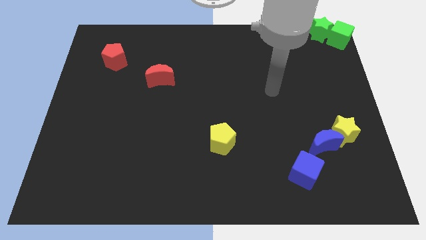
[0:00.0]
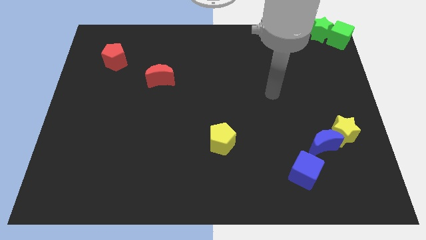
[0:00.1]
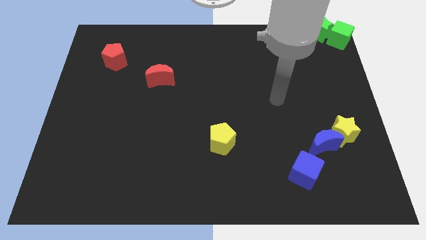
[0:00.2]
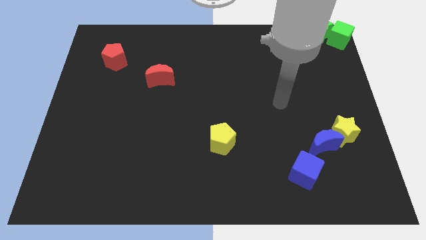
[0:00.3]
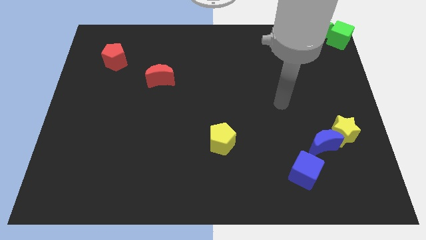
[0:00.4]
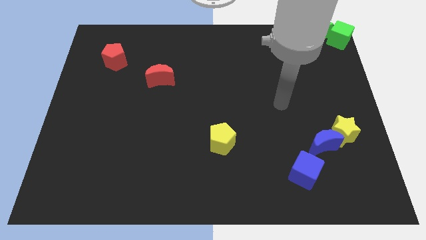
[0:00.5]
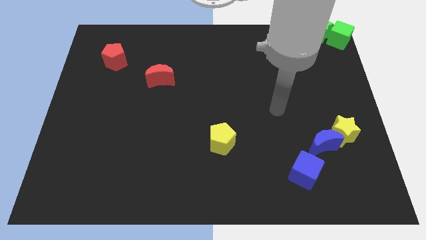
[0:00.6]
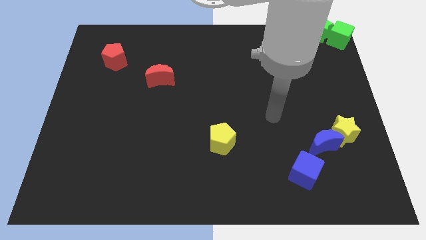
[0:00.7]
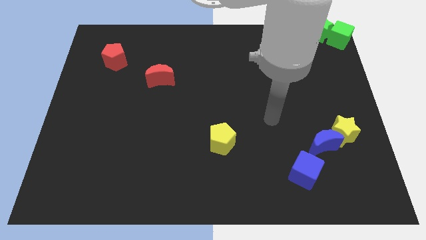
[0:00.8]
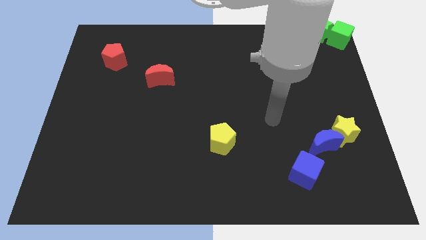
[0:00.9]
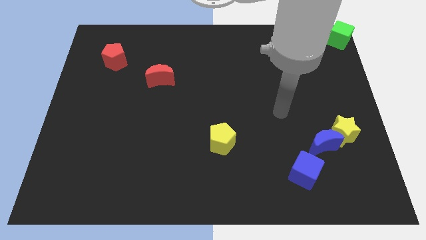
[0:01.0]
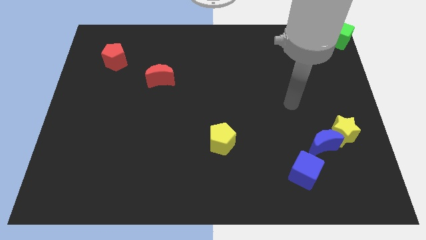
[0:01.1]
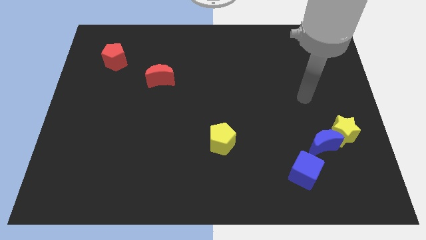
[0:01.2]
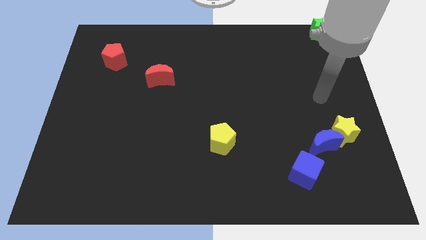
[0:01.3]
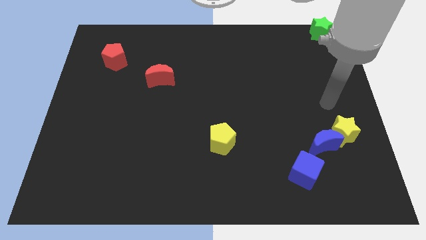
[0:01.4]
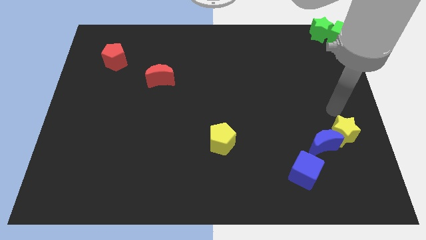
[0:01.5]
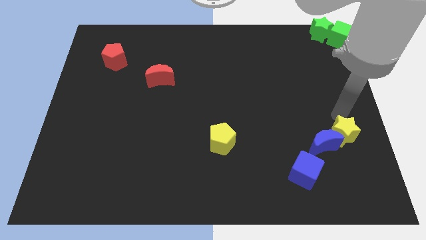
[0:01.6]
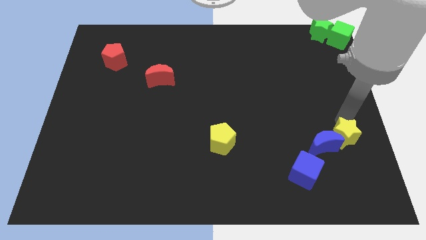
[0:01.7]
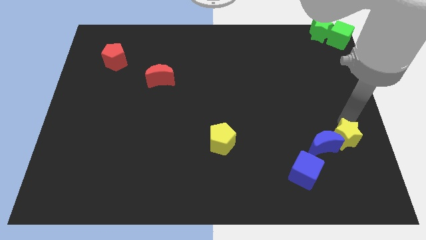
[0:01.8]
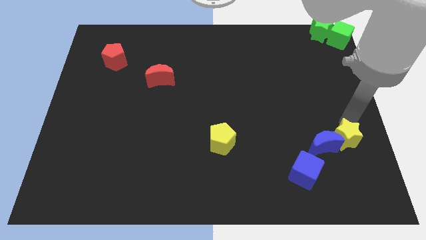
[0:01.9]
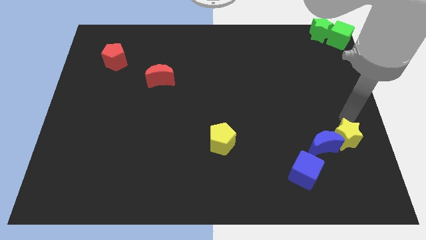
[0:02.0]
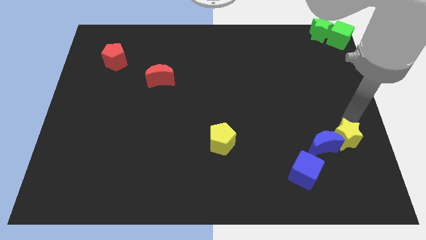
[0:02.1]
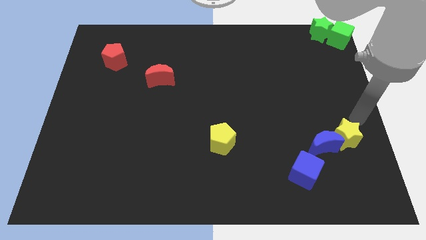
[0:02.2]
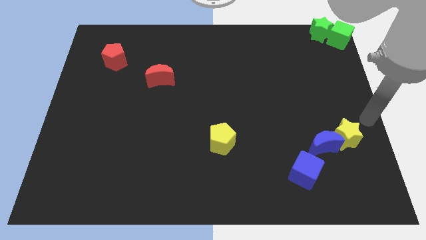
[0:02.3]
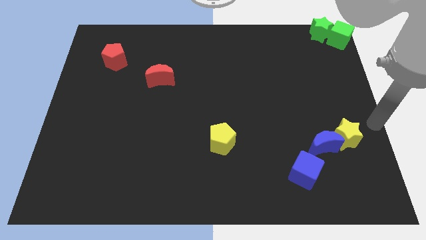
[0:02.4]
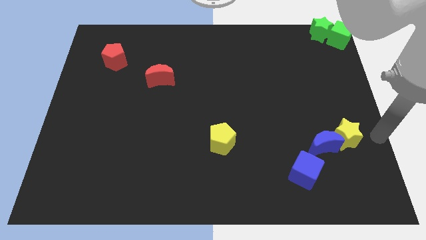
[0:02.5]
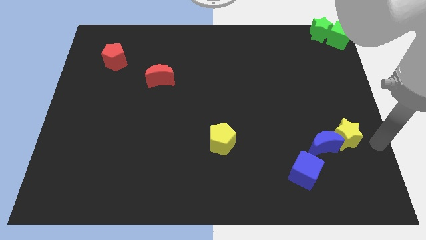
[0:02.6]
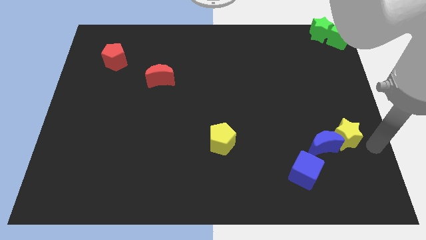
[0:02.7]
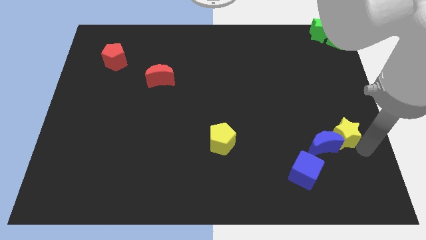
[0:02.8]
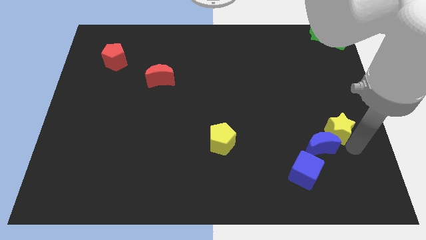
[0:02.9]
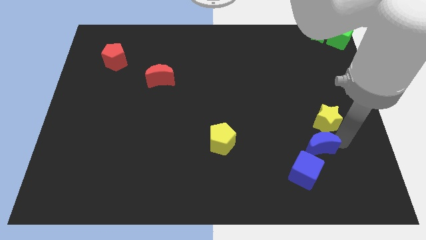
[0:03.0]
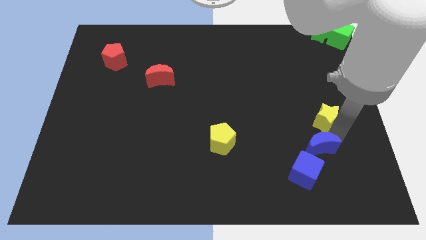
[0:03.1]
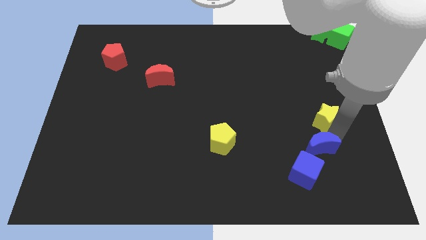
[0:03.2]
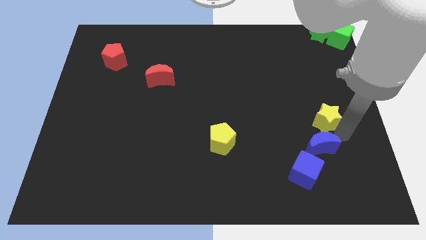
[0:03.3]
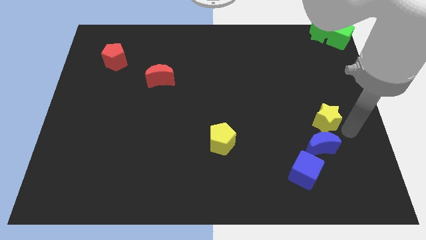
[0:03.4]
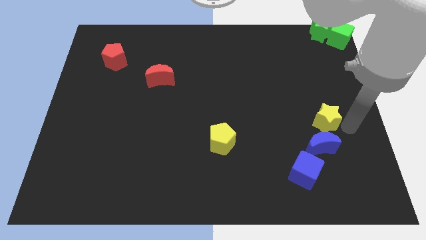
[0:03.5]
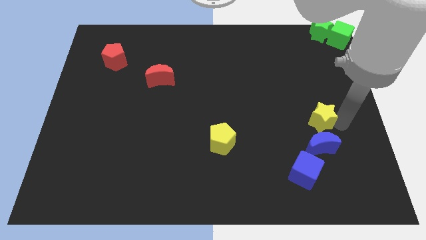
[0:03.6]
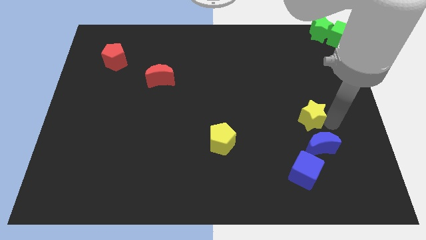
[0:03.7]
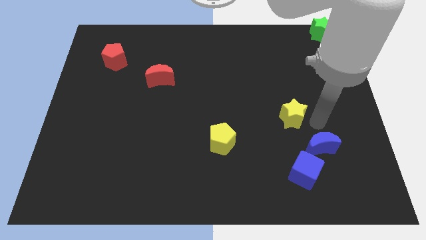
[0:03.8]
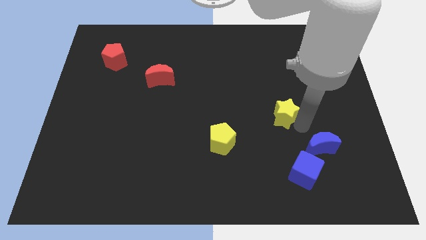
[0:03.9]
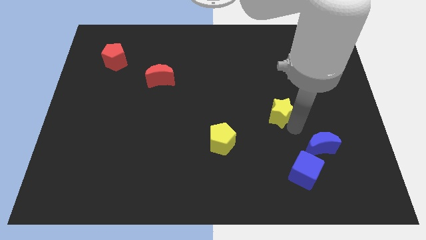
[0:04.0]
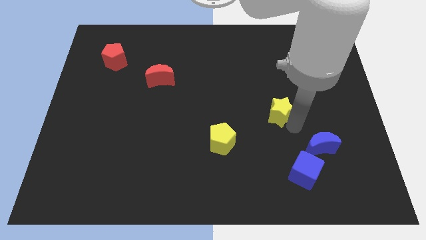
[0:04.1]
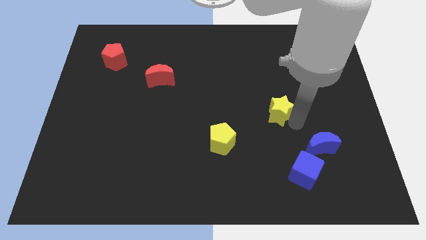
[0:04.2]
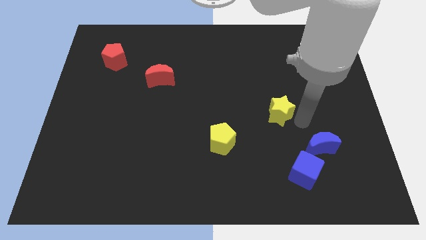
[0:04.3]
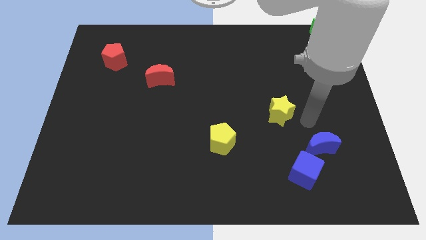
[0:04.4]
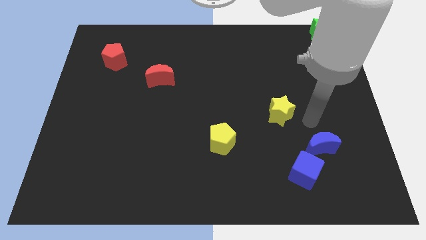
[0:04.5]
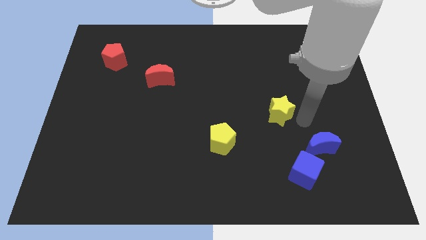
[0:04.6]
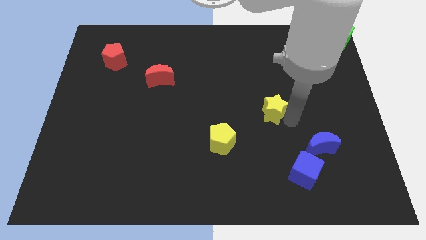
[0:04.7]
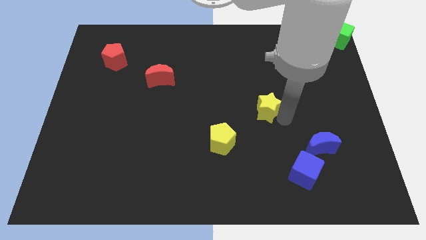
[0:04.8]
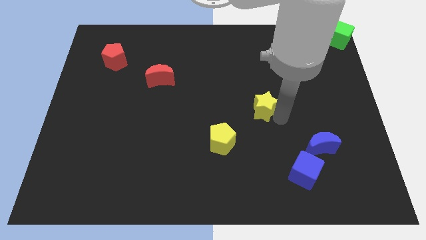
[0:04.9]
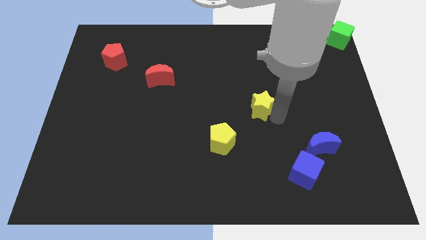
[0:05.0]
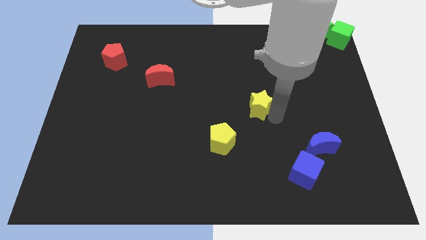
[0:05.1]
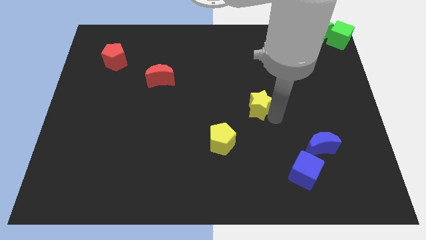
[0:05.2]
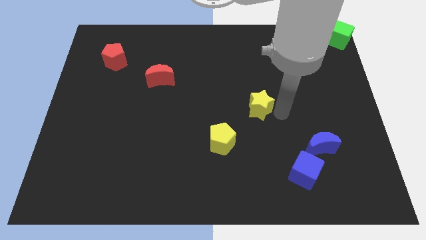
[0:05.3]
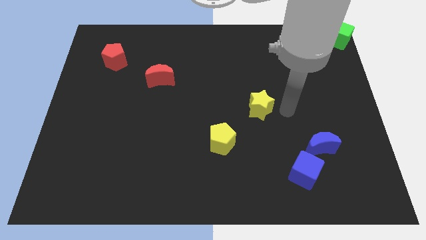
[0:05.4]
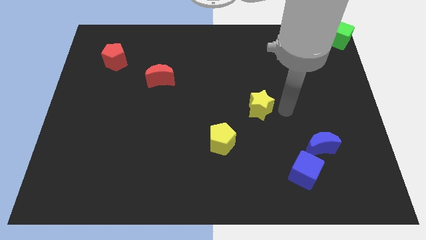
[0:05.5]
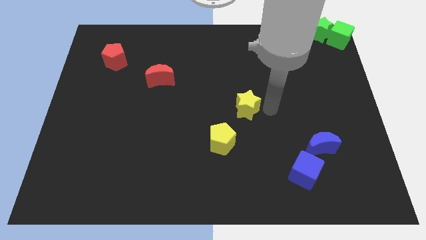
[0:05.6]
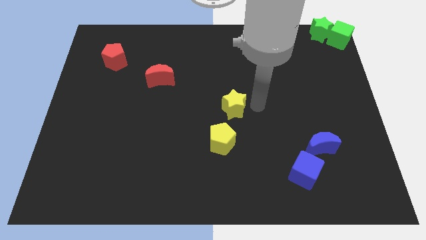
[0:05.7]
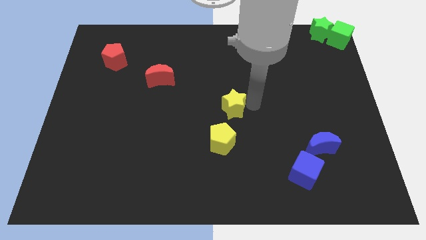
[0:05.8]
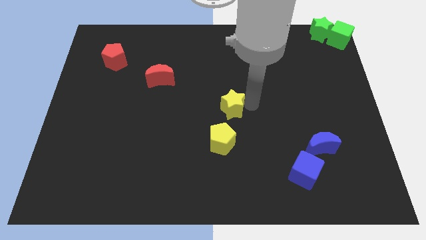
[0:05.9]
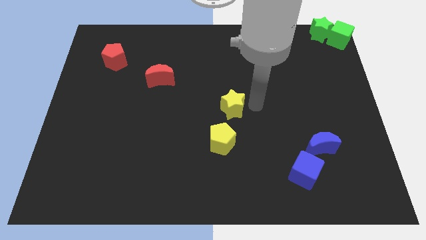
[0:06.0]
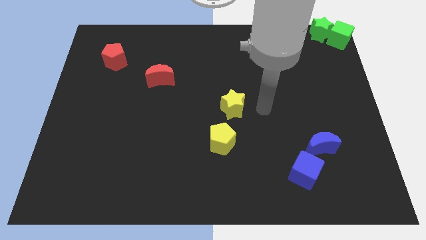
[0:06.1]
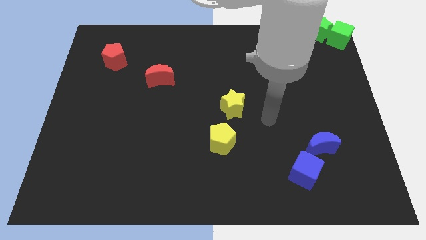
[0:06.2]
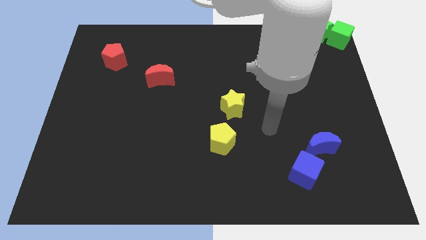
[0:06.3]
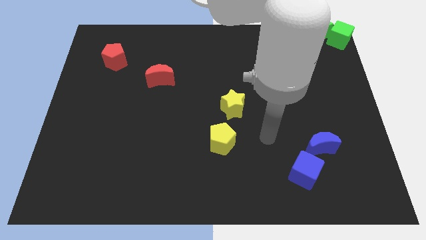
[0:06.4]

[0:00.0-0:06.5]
push the yellow star towards the red moon

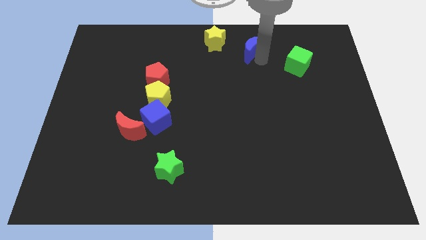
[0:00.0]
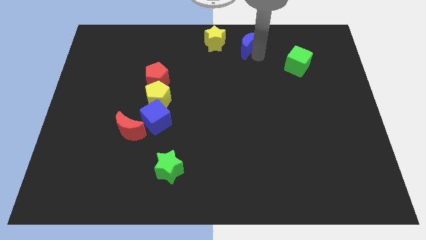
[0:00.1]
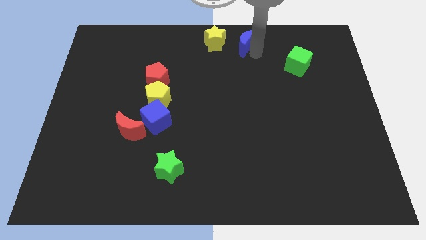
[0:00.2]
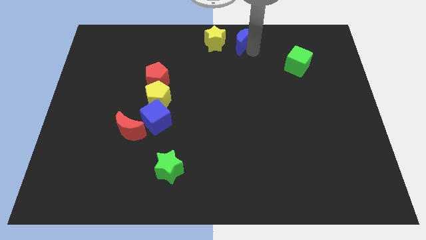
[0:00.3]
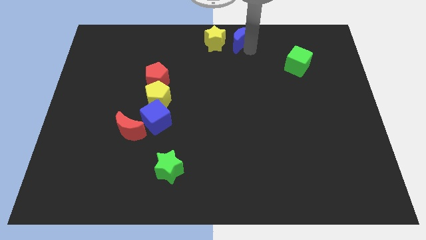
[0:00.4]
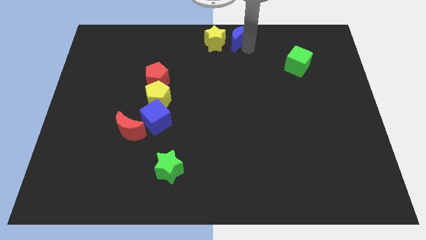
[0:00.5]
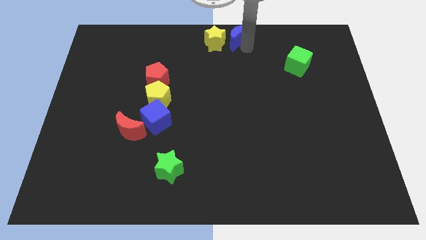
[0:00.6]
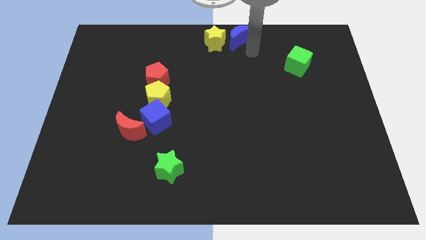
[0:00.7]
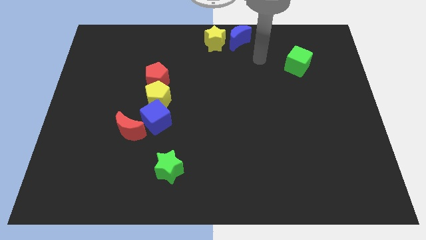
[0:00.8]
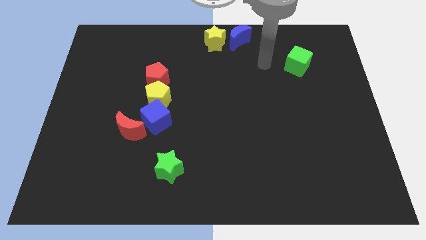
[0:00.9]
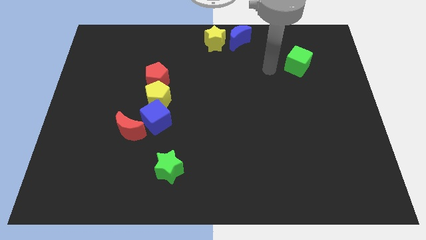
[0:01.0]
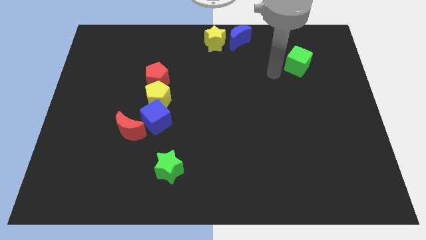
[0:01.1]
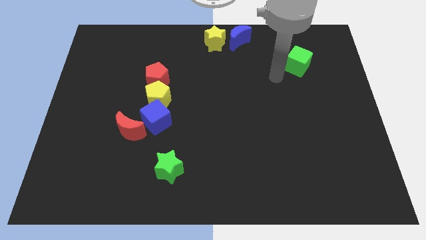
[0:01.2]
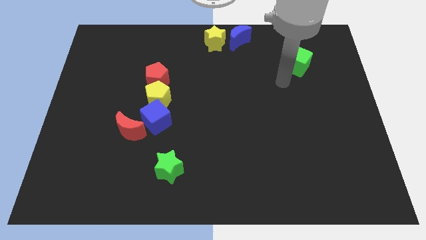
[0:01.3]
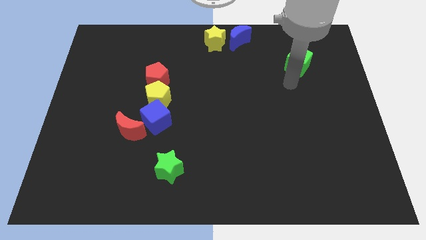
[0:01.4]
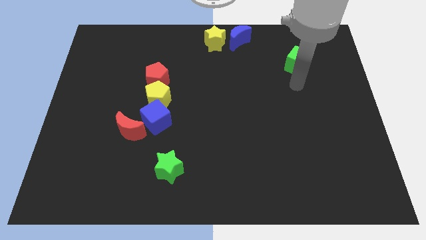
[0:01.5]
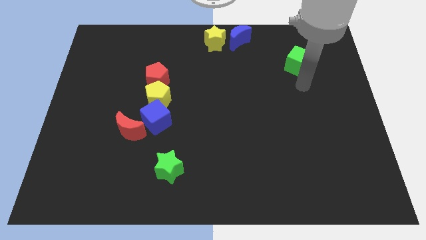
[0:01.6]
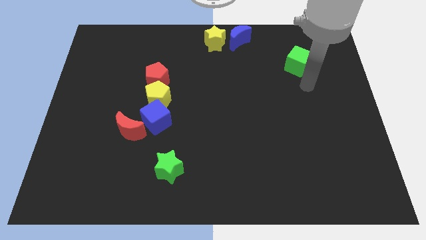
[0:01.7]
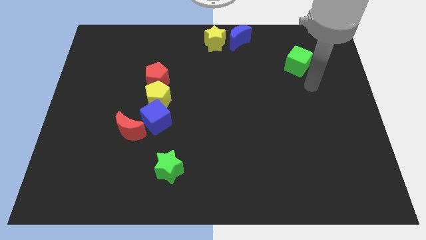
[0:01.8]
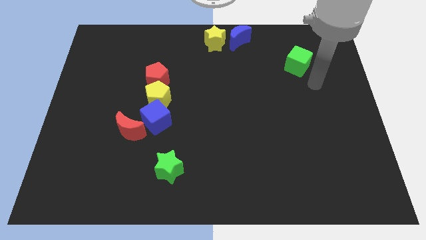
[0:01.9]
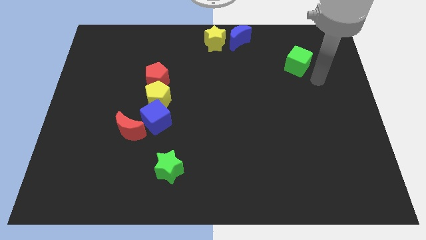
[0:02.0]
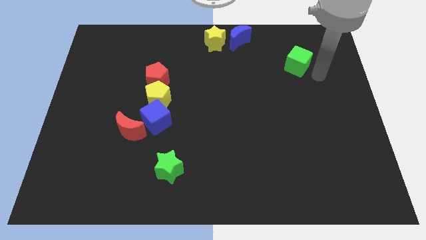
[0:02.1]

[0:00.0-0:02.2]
move the blue moon to the right of the yellow star

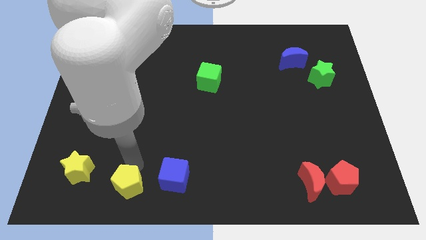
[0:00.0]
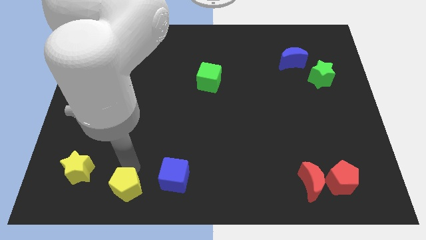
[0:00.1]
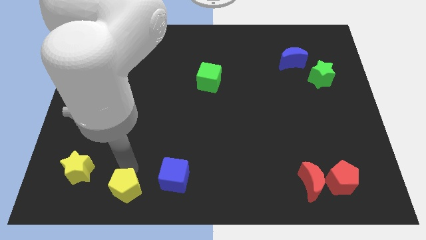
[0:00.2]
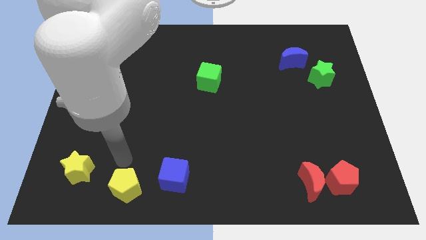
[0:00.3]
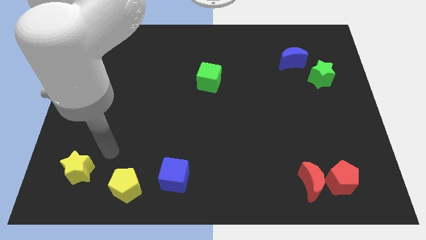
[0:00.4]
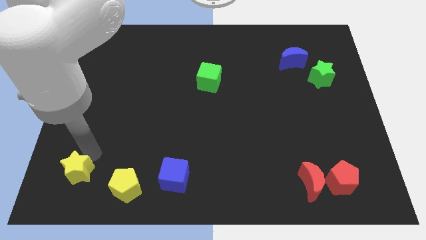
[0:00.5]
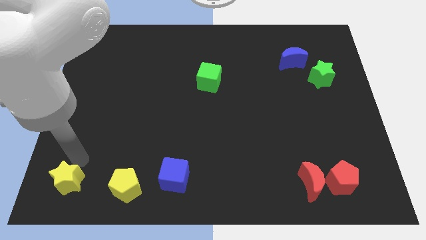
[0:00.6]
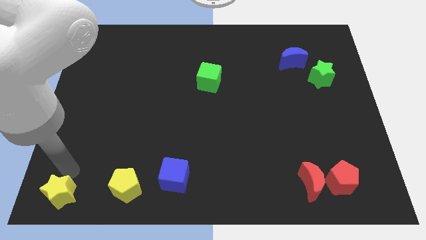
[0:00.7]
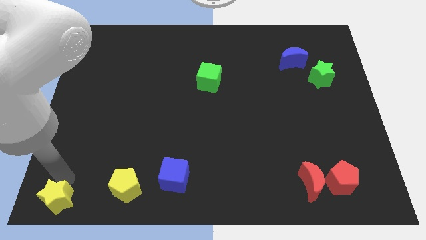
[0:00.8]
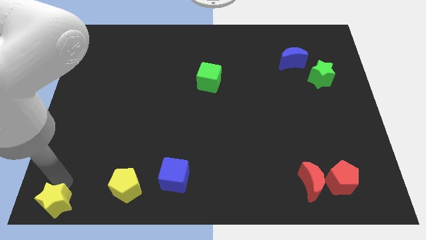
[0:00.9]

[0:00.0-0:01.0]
push yellow dress to bottom left
